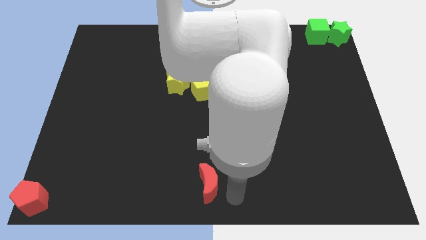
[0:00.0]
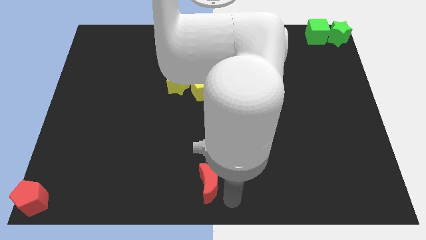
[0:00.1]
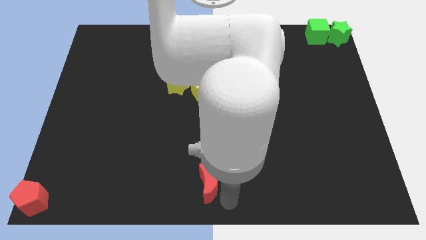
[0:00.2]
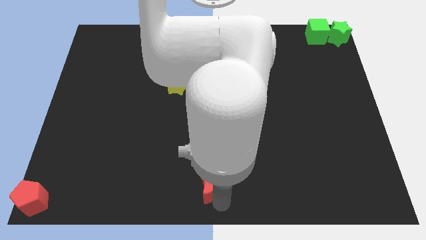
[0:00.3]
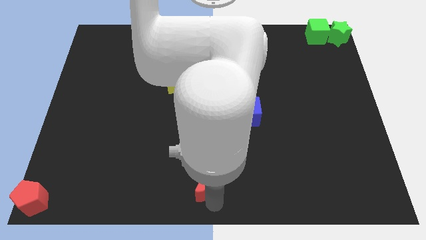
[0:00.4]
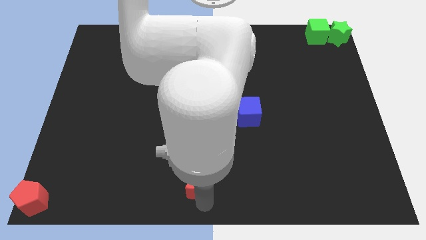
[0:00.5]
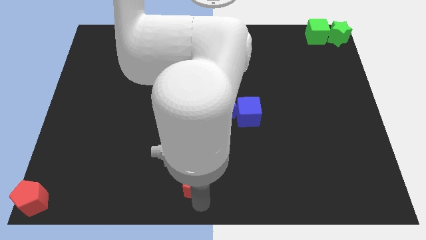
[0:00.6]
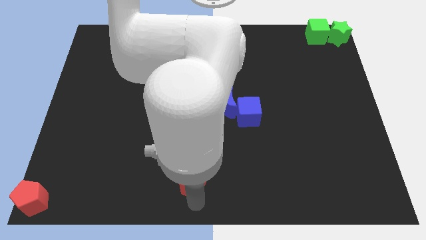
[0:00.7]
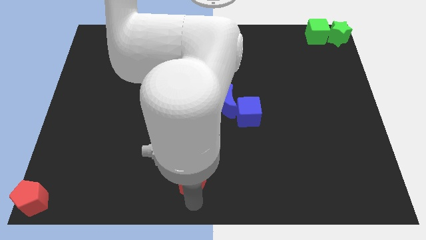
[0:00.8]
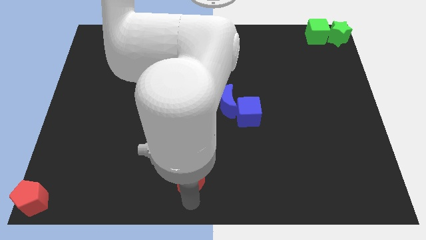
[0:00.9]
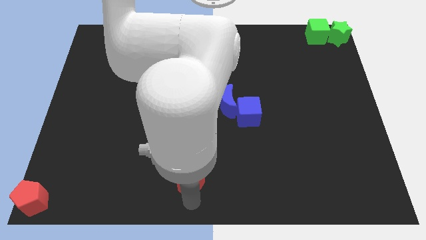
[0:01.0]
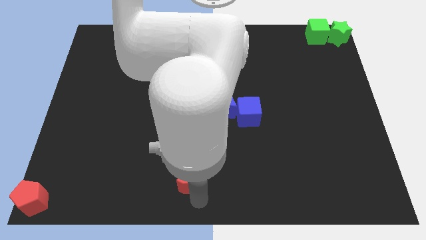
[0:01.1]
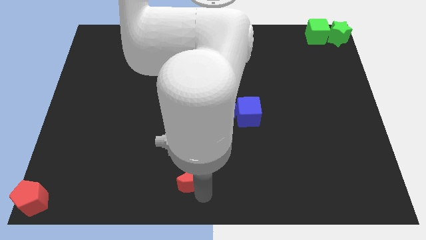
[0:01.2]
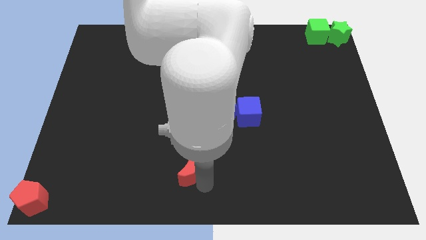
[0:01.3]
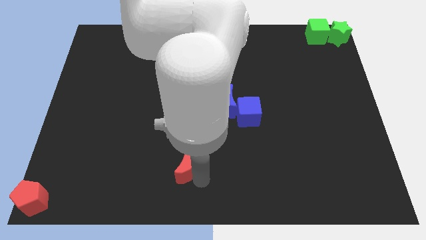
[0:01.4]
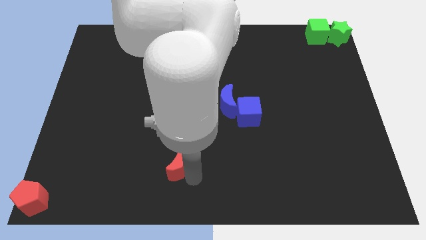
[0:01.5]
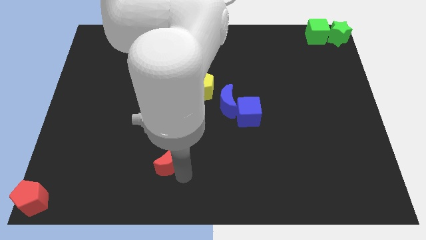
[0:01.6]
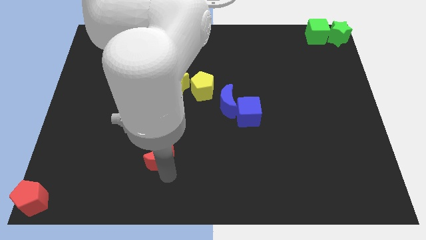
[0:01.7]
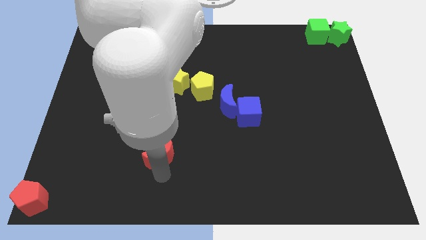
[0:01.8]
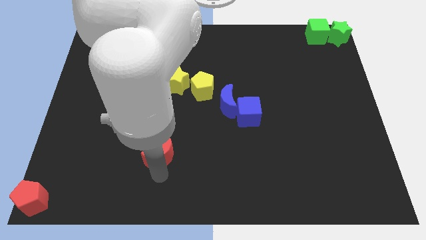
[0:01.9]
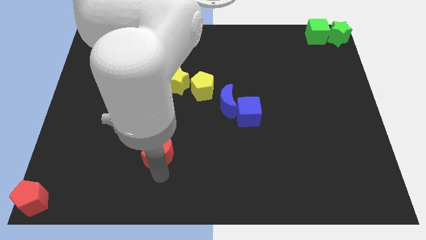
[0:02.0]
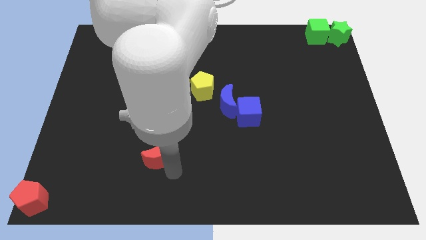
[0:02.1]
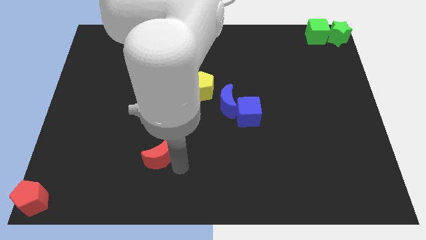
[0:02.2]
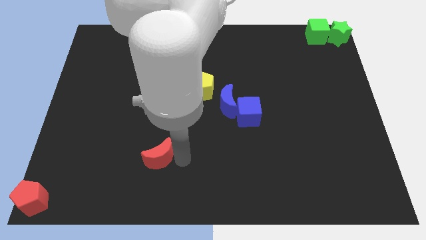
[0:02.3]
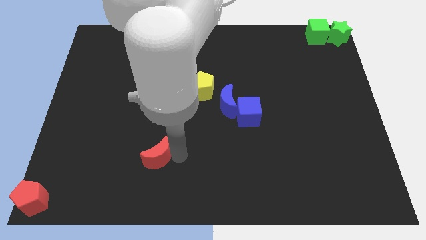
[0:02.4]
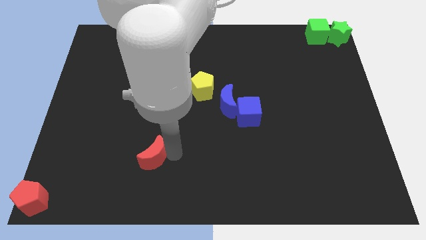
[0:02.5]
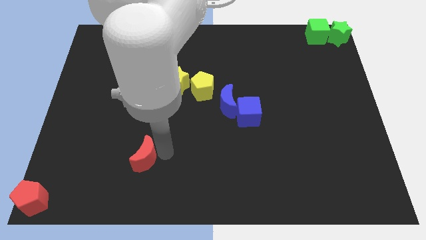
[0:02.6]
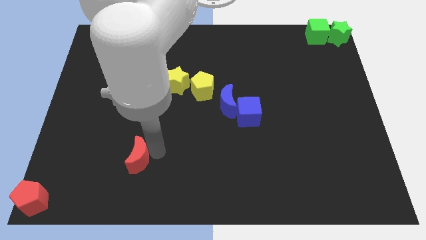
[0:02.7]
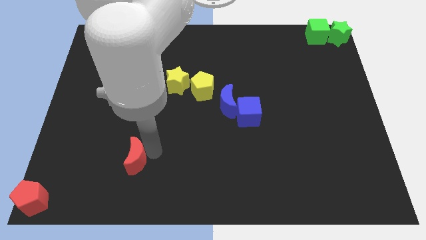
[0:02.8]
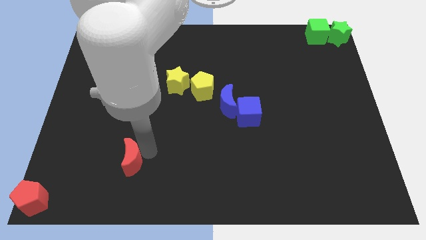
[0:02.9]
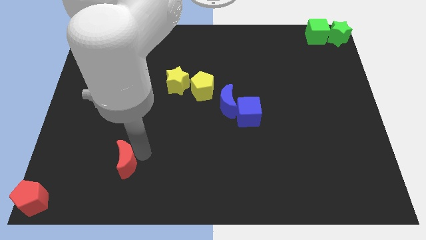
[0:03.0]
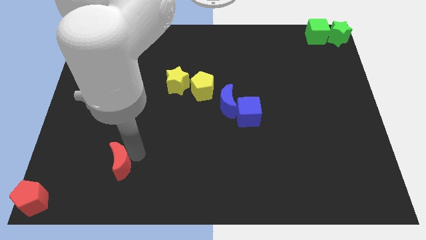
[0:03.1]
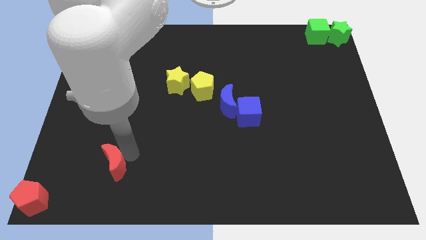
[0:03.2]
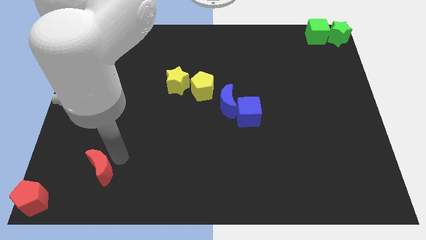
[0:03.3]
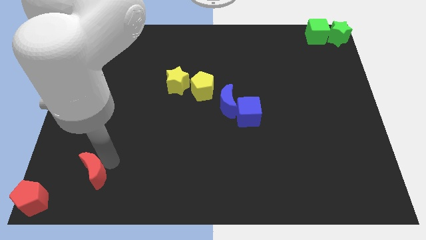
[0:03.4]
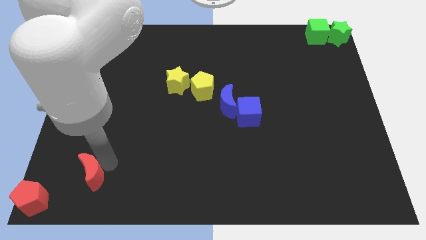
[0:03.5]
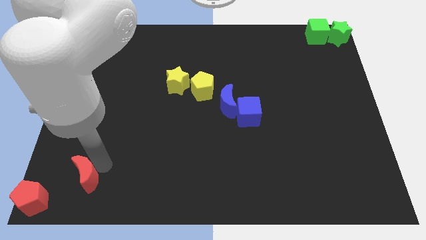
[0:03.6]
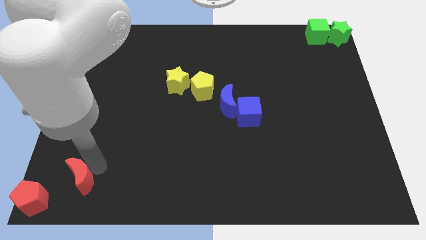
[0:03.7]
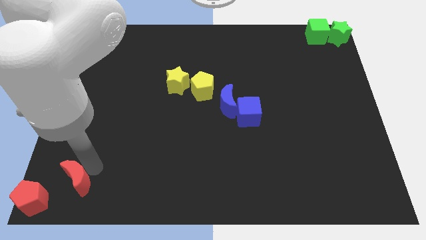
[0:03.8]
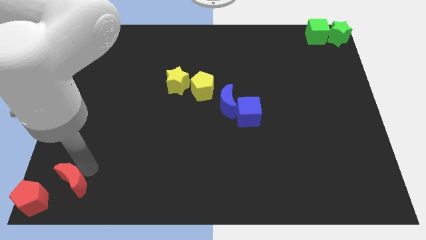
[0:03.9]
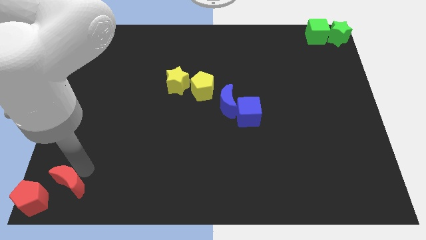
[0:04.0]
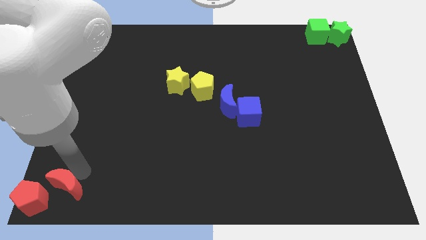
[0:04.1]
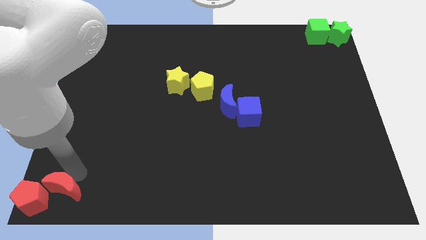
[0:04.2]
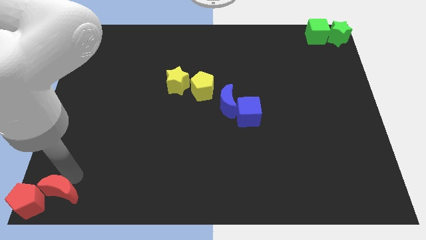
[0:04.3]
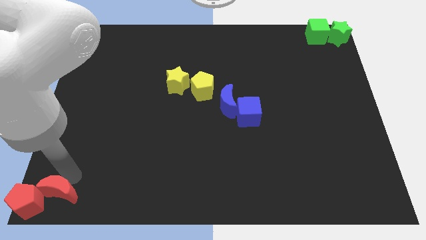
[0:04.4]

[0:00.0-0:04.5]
make the red crescent touch the top right of the red pentagon

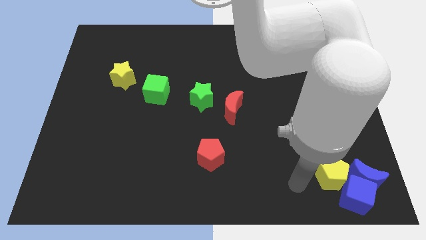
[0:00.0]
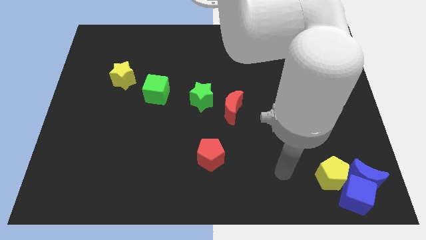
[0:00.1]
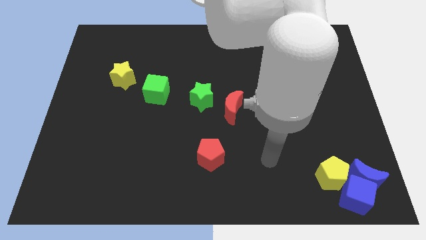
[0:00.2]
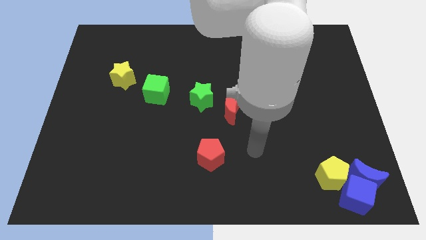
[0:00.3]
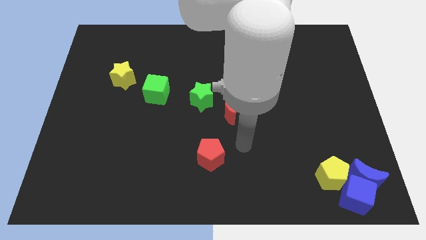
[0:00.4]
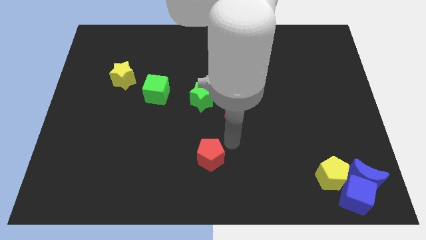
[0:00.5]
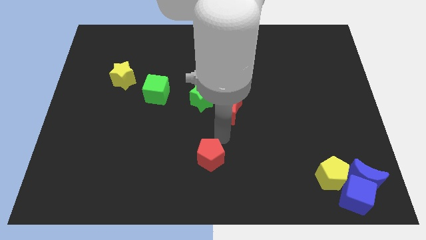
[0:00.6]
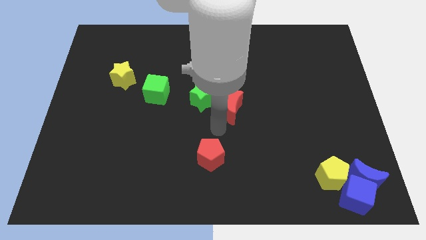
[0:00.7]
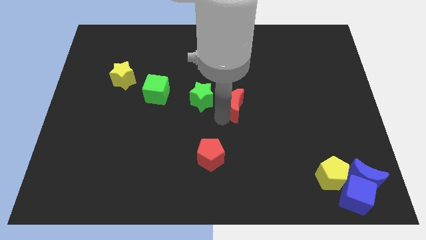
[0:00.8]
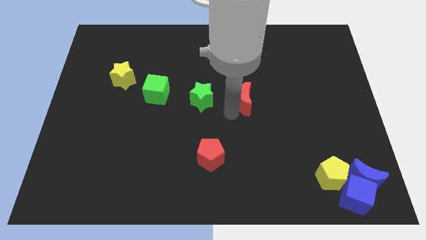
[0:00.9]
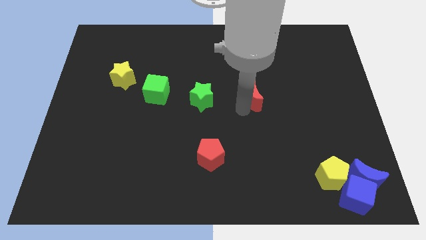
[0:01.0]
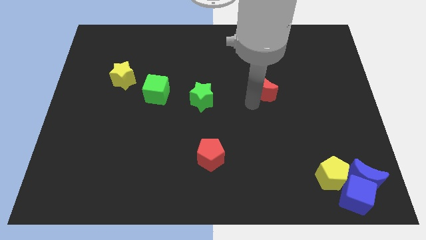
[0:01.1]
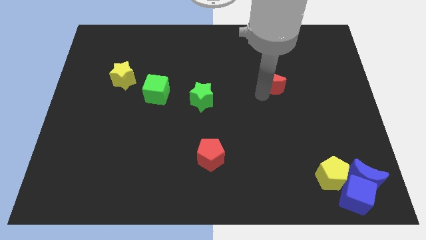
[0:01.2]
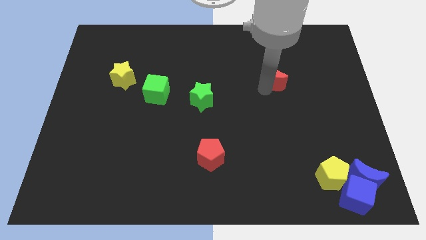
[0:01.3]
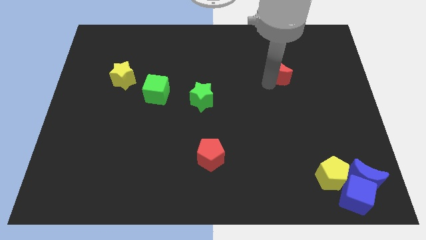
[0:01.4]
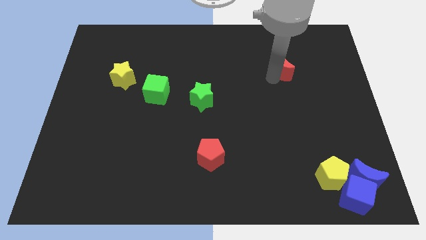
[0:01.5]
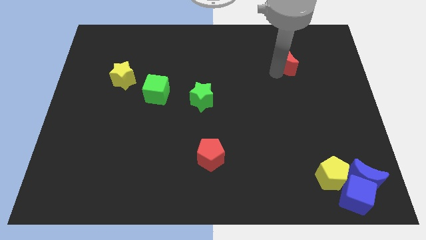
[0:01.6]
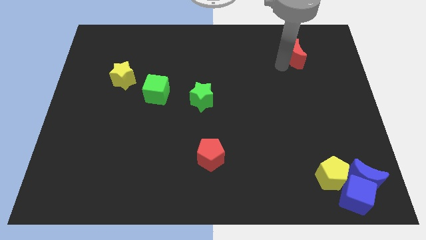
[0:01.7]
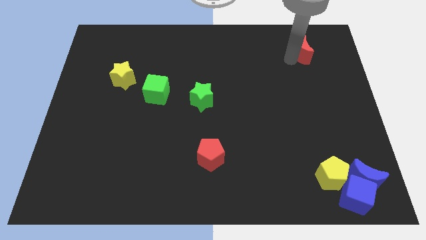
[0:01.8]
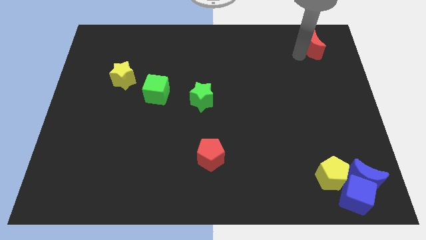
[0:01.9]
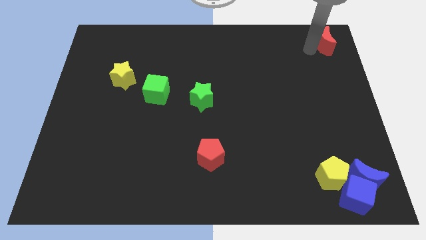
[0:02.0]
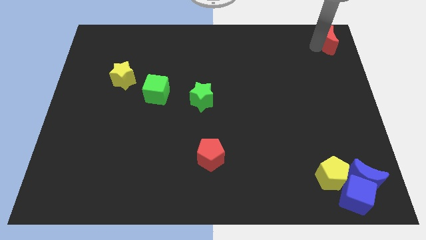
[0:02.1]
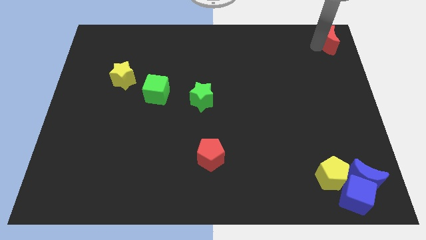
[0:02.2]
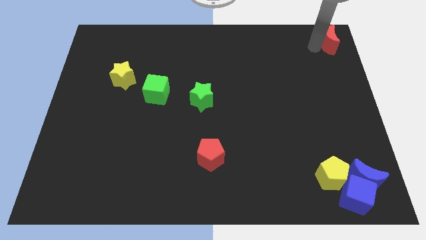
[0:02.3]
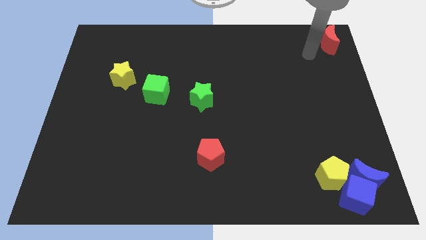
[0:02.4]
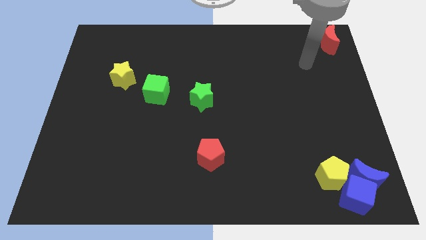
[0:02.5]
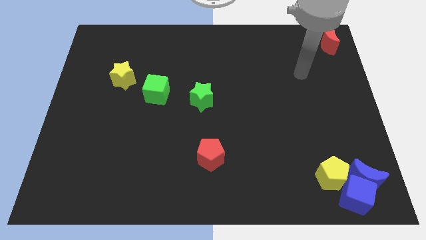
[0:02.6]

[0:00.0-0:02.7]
move red crescent to top right corner

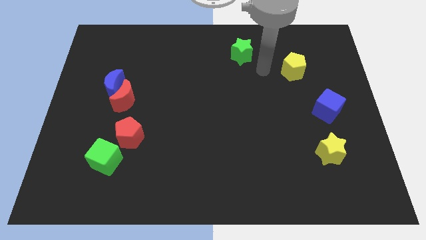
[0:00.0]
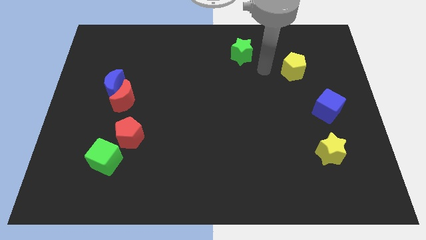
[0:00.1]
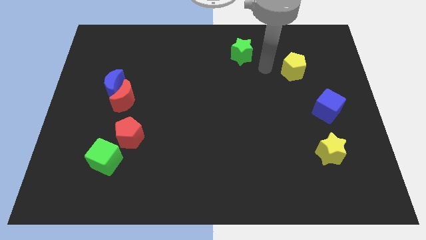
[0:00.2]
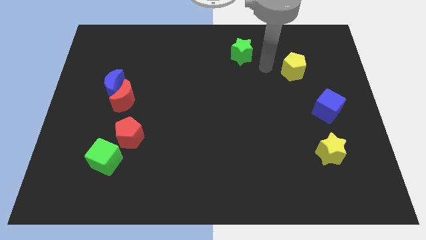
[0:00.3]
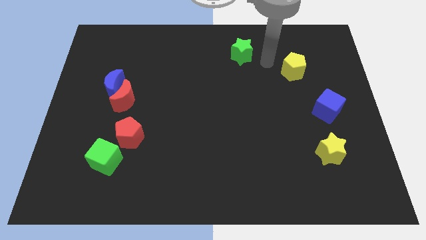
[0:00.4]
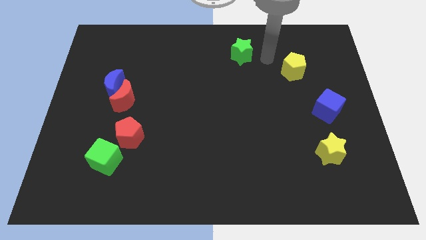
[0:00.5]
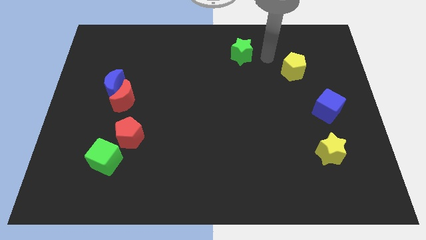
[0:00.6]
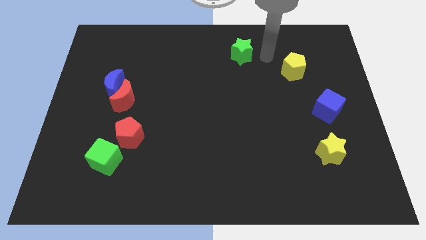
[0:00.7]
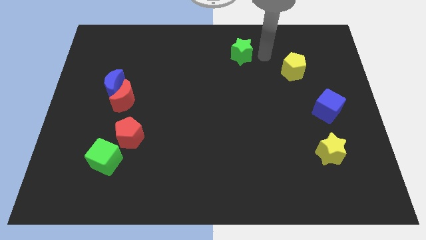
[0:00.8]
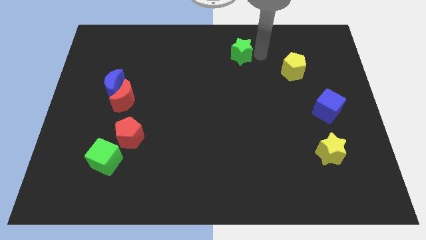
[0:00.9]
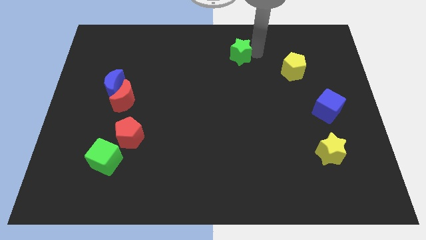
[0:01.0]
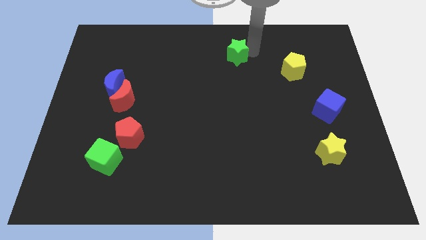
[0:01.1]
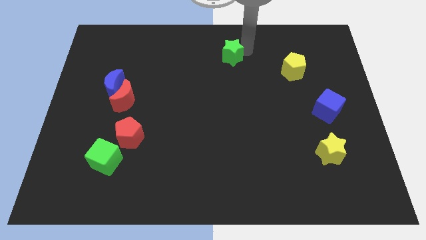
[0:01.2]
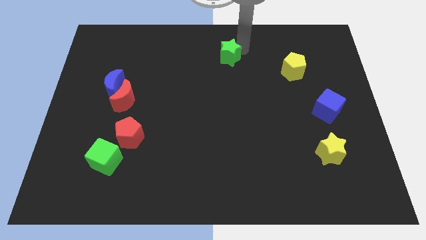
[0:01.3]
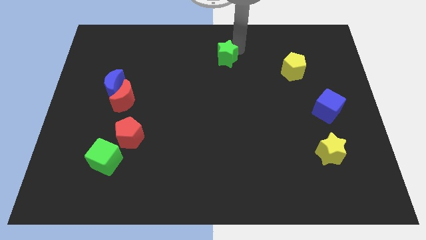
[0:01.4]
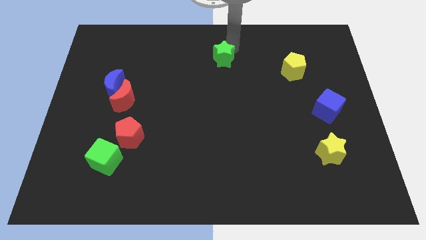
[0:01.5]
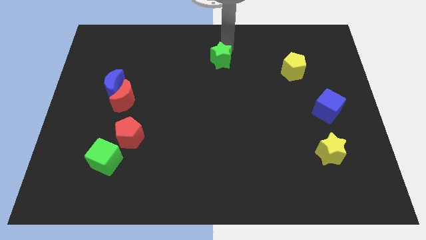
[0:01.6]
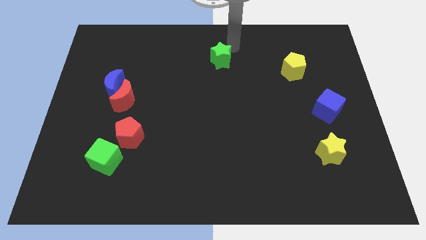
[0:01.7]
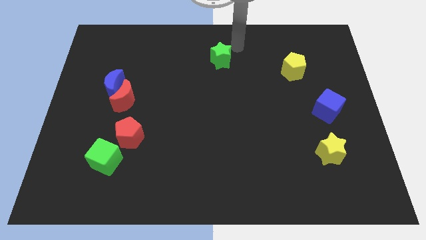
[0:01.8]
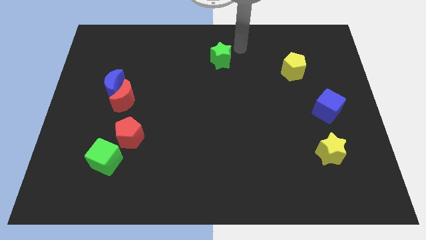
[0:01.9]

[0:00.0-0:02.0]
push the green star to the top center
